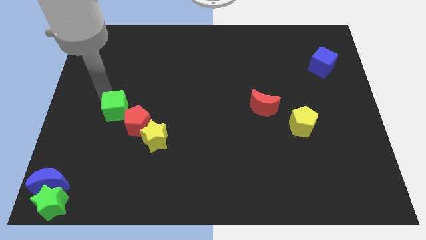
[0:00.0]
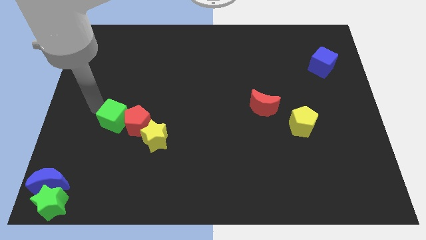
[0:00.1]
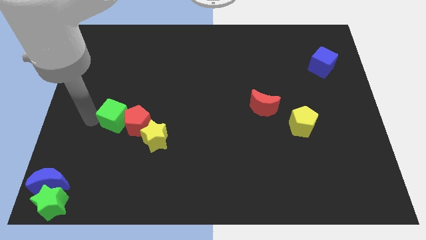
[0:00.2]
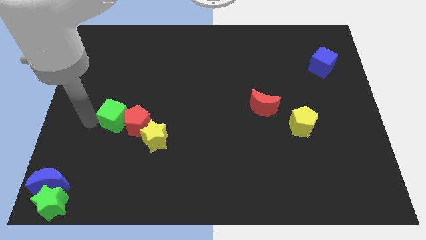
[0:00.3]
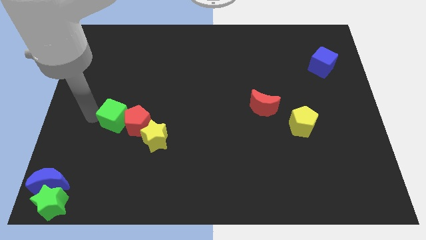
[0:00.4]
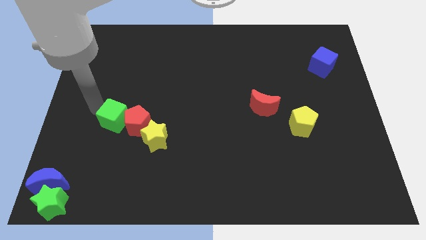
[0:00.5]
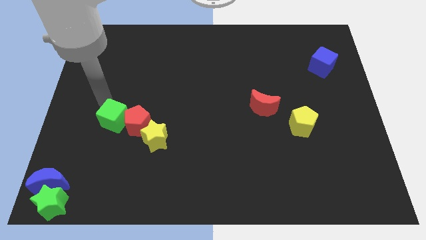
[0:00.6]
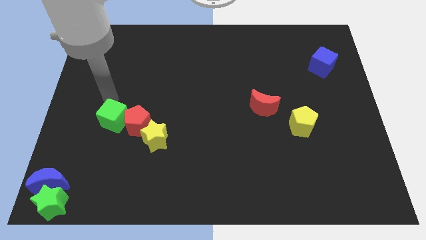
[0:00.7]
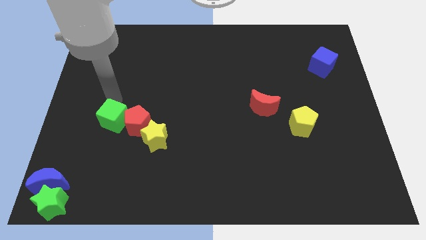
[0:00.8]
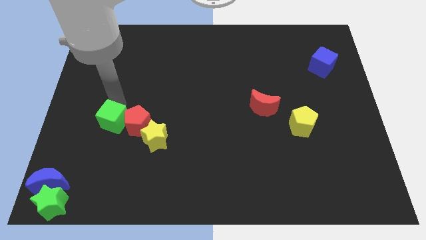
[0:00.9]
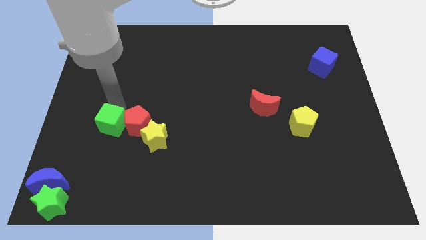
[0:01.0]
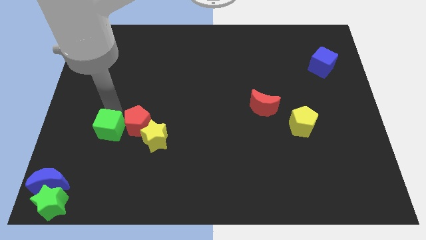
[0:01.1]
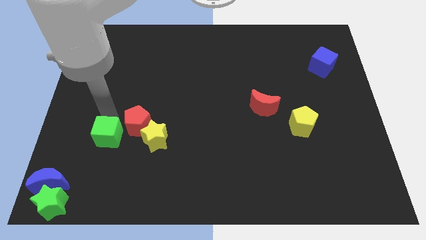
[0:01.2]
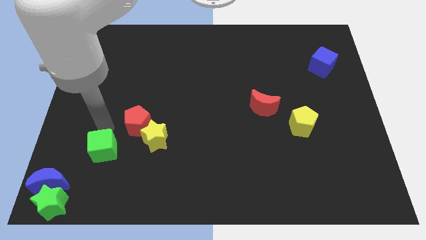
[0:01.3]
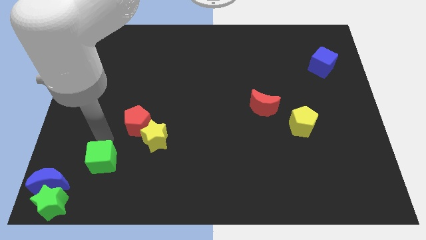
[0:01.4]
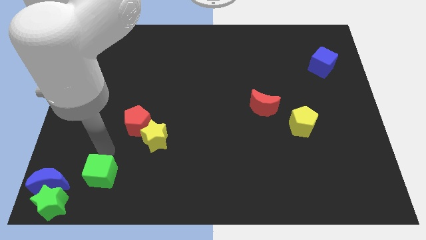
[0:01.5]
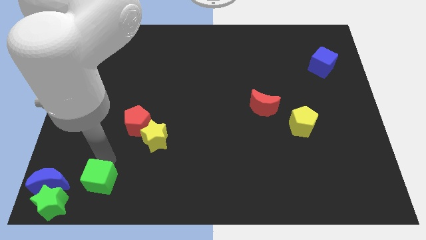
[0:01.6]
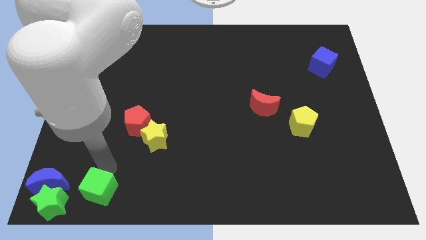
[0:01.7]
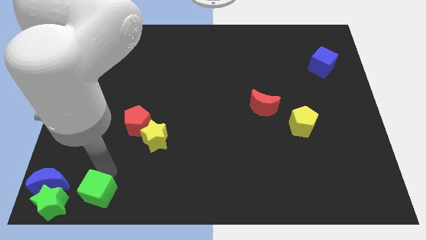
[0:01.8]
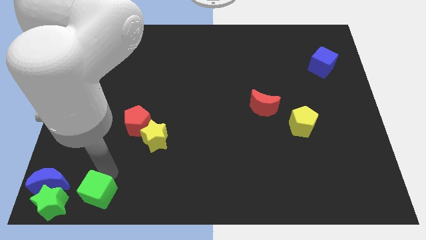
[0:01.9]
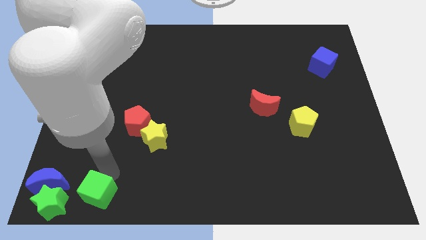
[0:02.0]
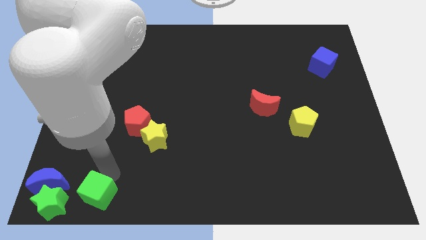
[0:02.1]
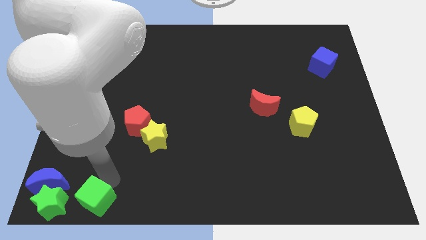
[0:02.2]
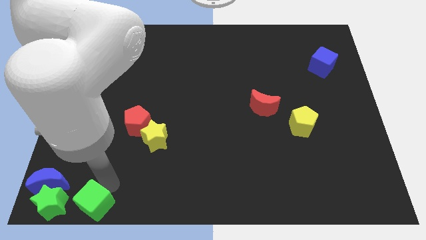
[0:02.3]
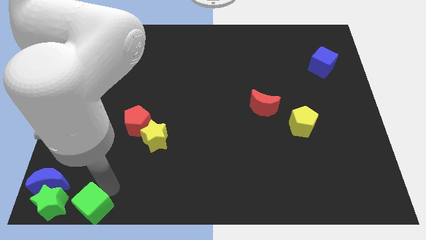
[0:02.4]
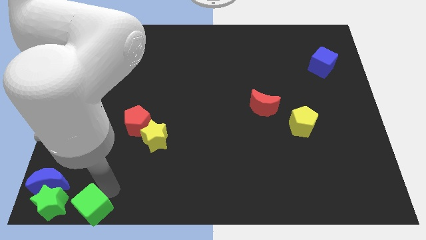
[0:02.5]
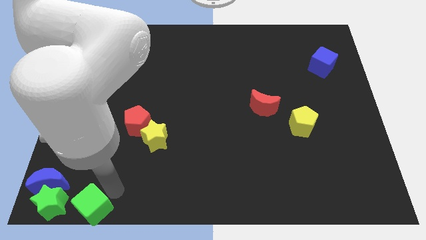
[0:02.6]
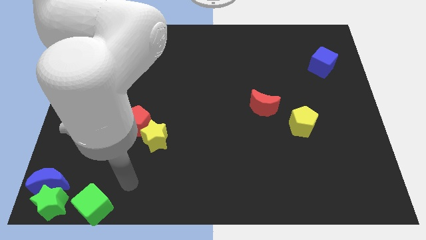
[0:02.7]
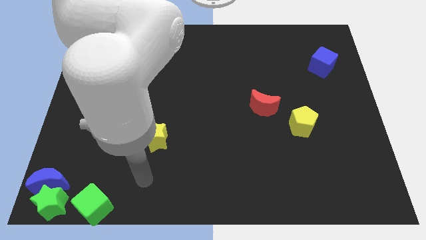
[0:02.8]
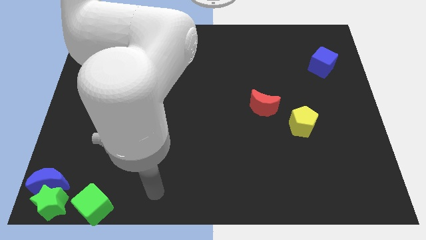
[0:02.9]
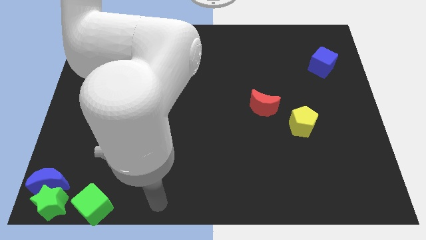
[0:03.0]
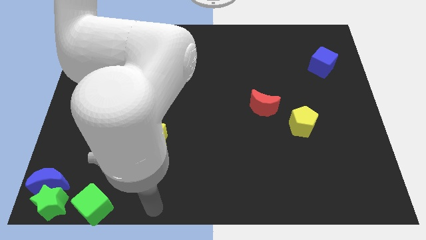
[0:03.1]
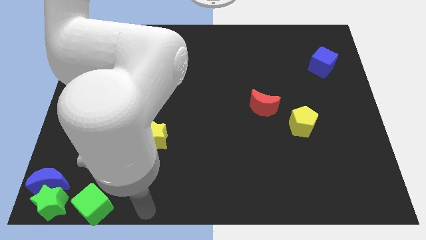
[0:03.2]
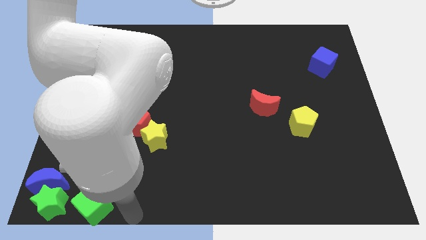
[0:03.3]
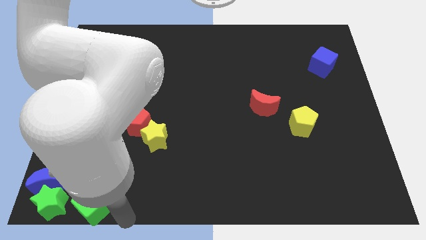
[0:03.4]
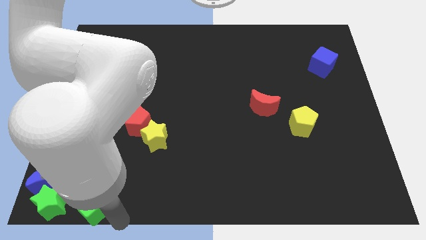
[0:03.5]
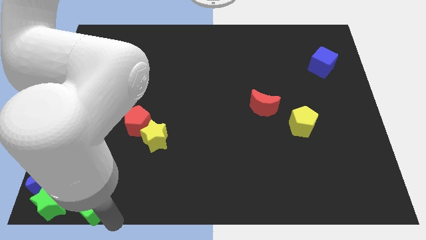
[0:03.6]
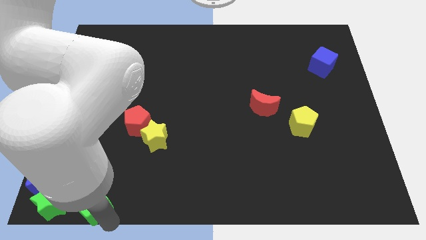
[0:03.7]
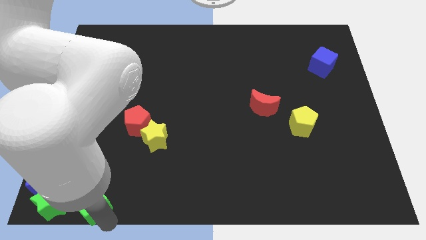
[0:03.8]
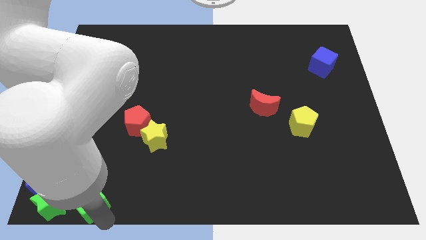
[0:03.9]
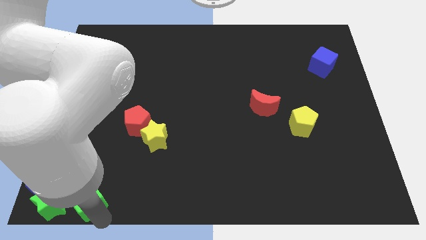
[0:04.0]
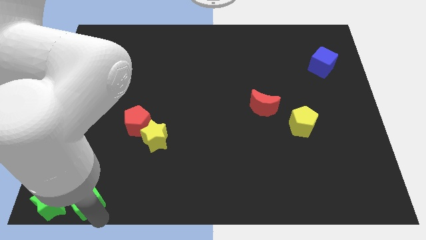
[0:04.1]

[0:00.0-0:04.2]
move the green cube right beside the green star

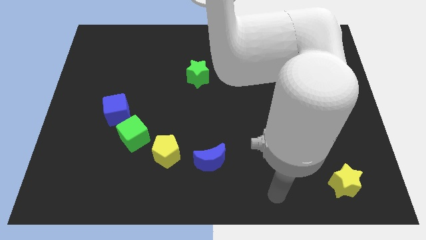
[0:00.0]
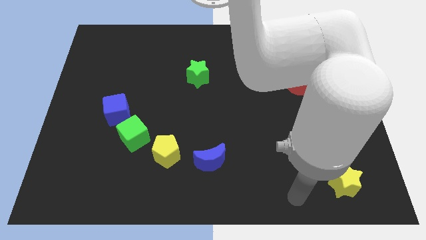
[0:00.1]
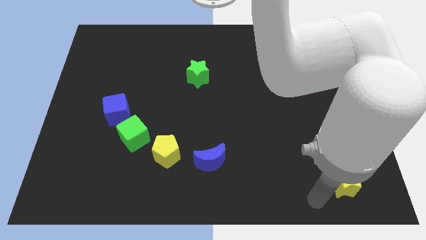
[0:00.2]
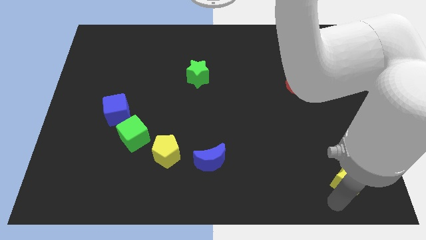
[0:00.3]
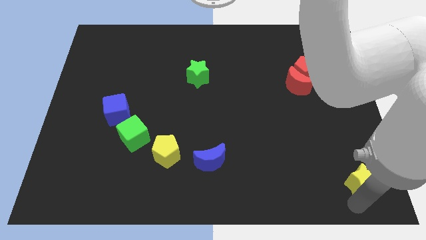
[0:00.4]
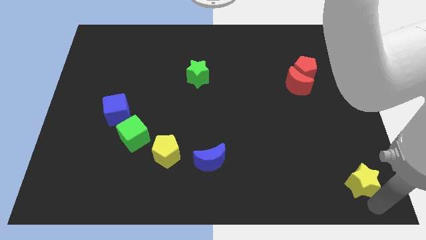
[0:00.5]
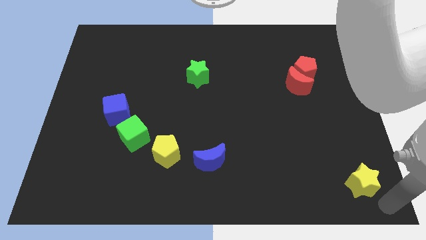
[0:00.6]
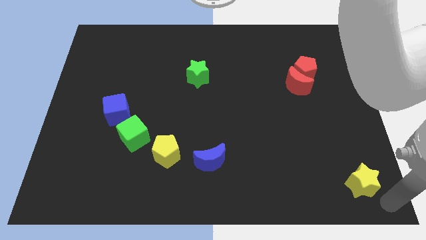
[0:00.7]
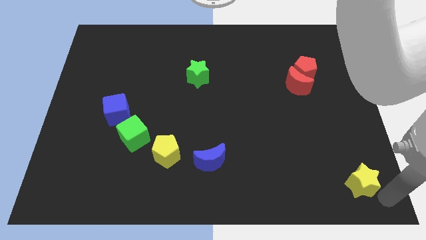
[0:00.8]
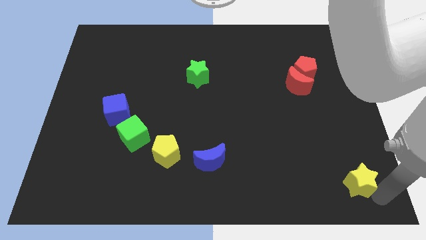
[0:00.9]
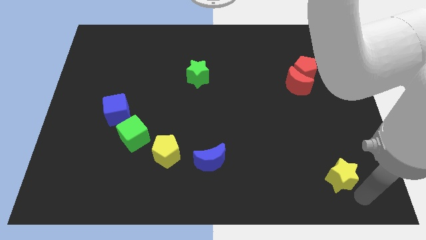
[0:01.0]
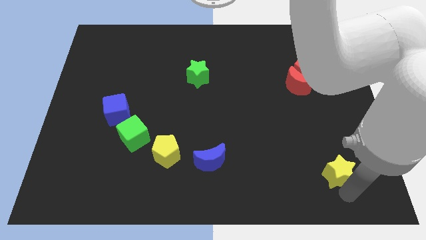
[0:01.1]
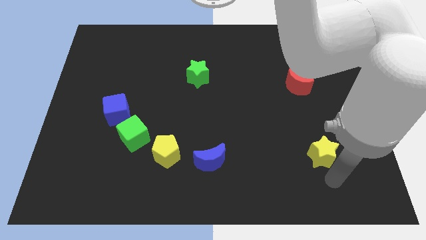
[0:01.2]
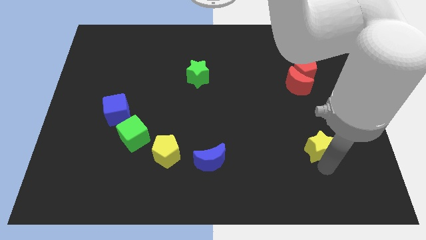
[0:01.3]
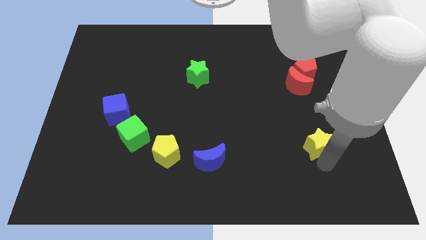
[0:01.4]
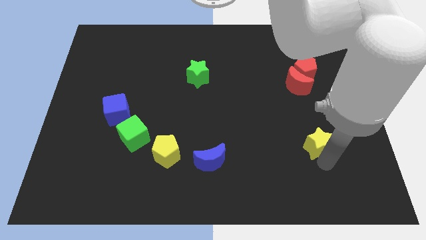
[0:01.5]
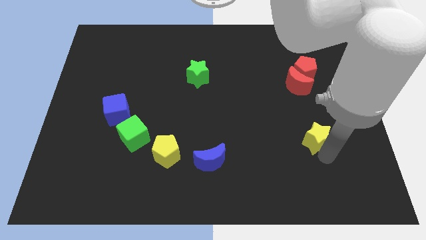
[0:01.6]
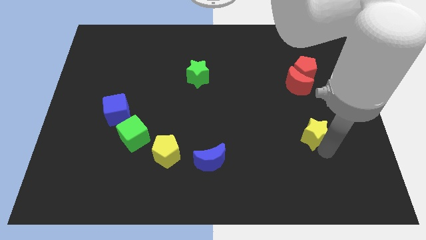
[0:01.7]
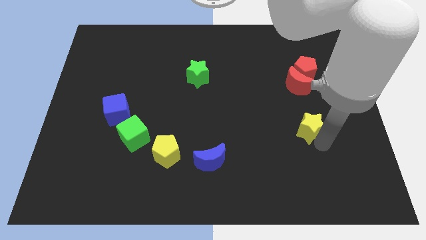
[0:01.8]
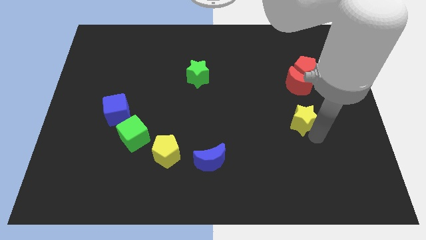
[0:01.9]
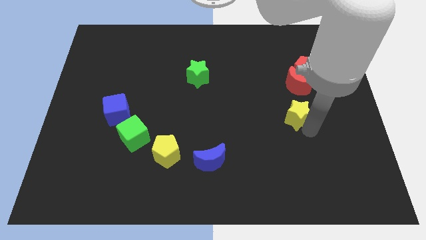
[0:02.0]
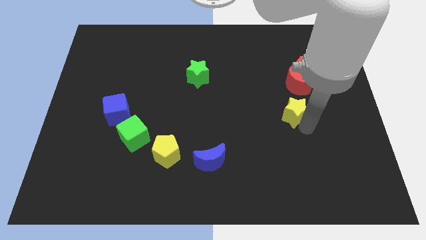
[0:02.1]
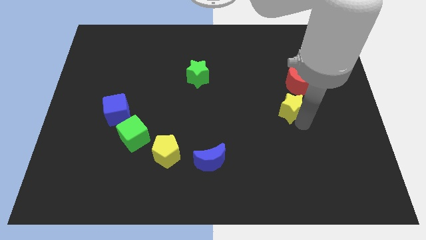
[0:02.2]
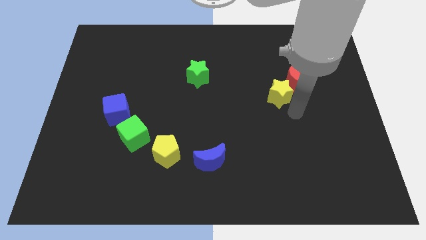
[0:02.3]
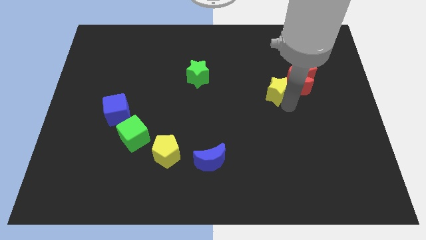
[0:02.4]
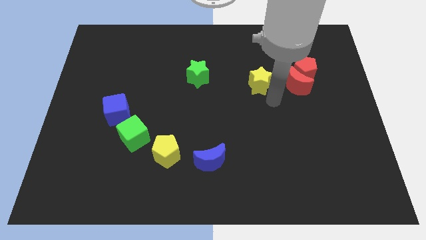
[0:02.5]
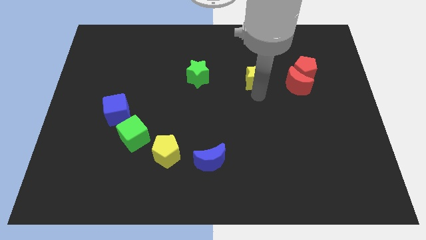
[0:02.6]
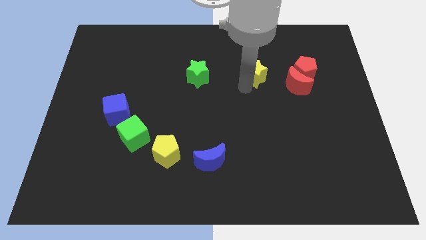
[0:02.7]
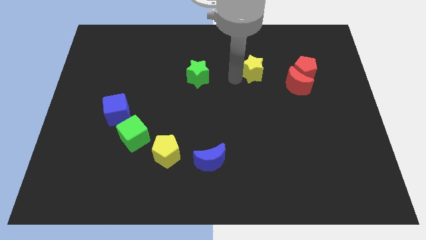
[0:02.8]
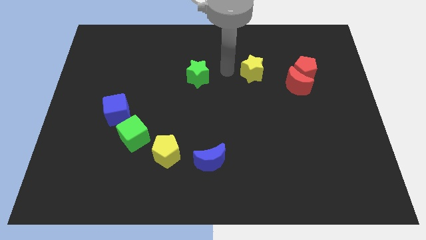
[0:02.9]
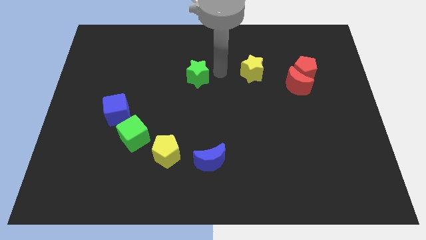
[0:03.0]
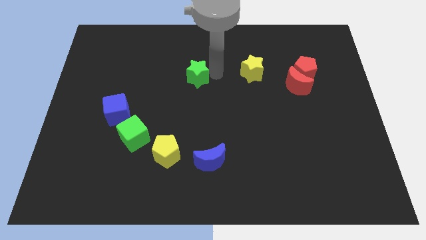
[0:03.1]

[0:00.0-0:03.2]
move the yellow star to the right side of the green star

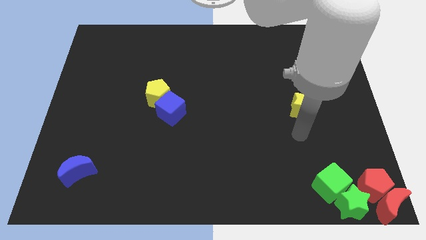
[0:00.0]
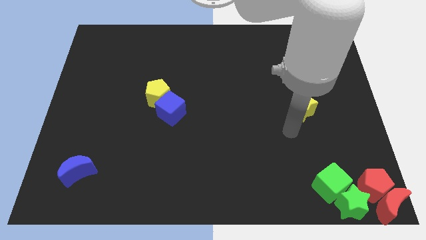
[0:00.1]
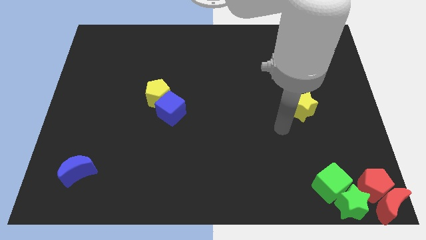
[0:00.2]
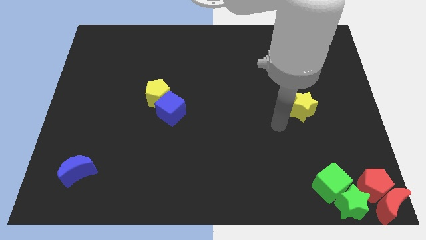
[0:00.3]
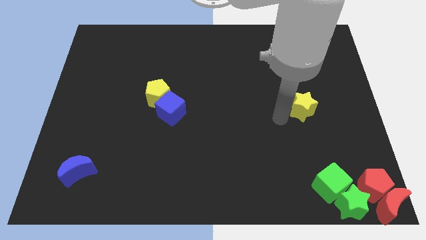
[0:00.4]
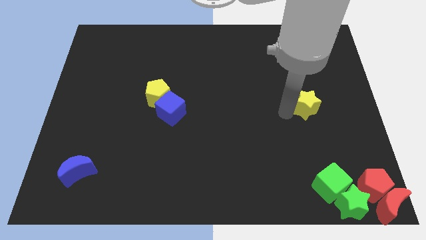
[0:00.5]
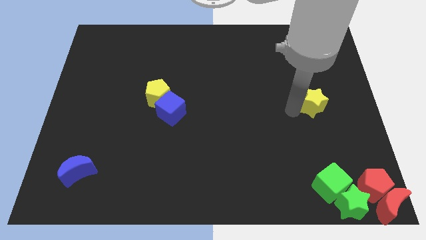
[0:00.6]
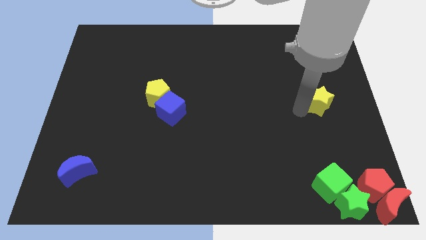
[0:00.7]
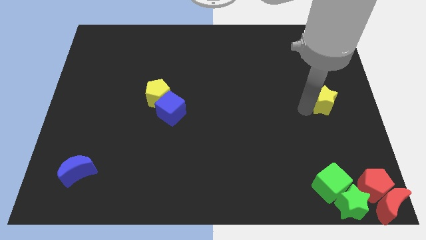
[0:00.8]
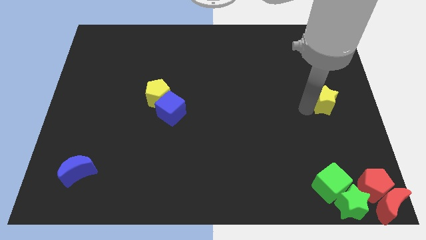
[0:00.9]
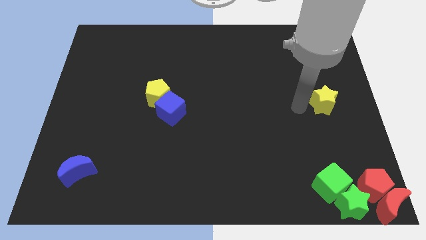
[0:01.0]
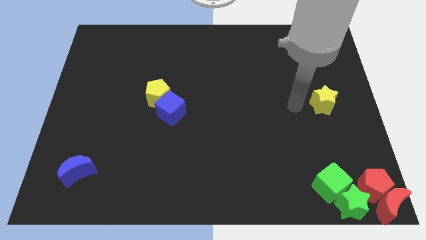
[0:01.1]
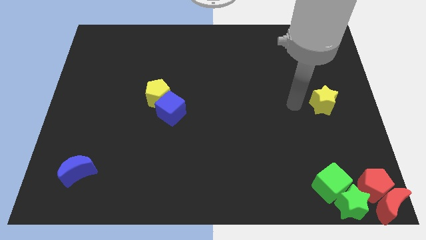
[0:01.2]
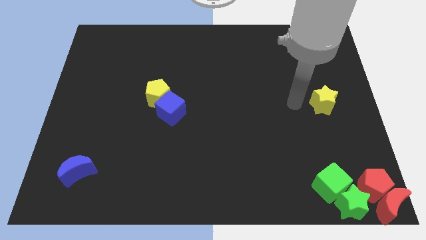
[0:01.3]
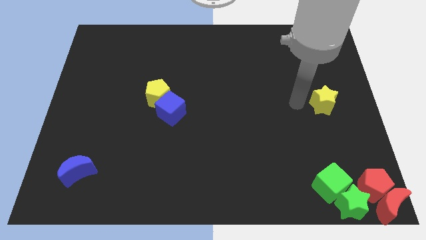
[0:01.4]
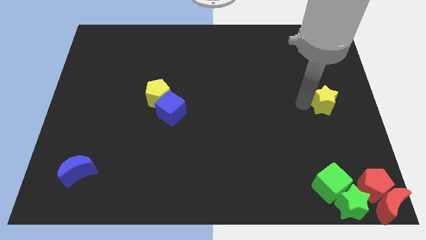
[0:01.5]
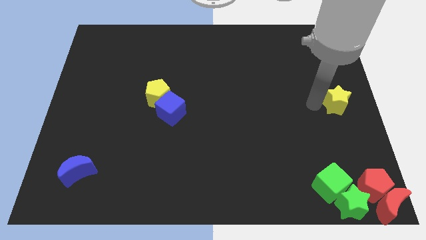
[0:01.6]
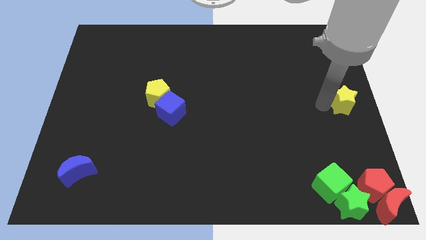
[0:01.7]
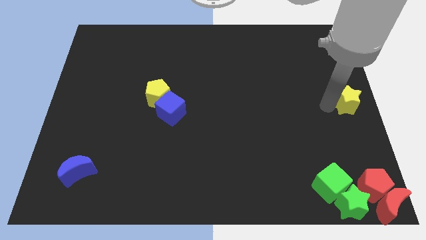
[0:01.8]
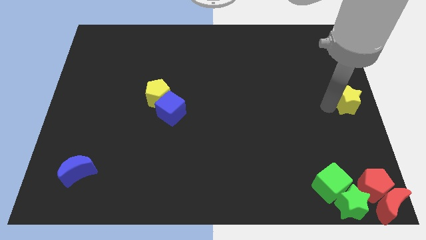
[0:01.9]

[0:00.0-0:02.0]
move yellow star towards the right middle center of the board
